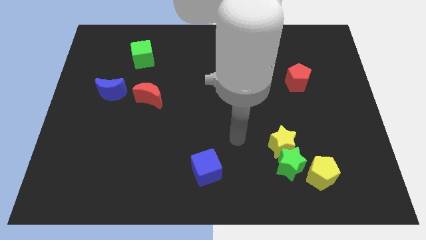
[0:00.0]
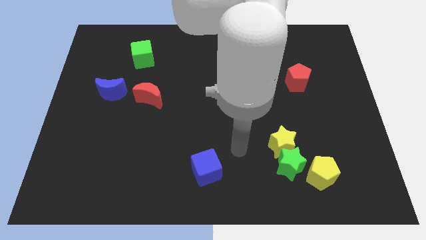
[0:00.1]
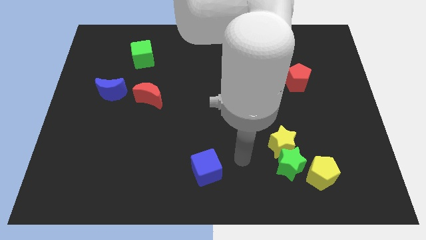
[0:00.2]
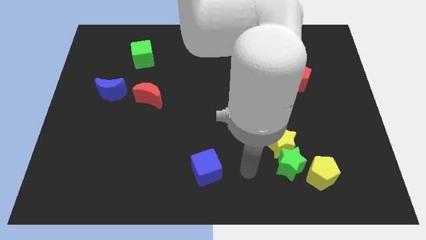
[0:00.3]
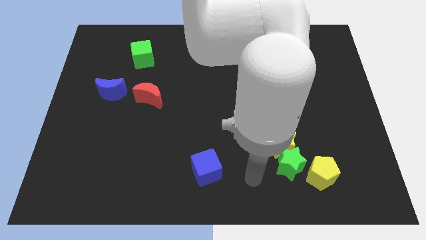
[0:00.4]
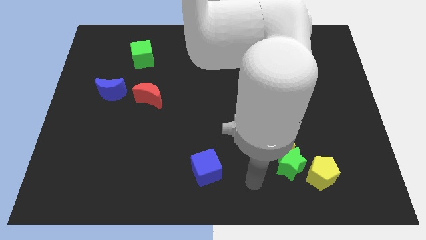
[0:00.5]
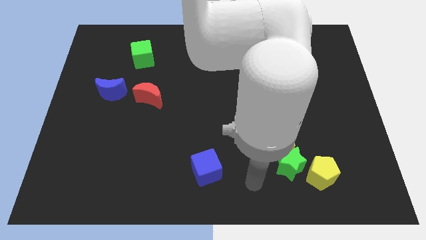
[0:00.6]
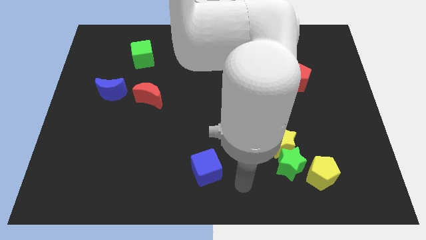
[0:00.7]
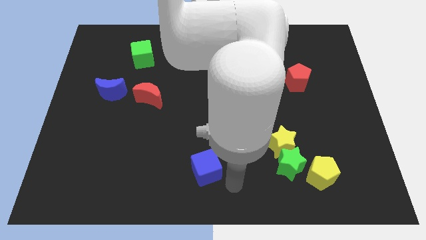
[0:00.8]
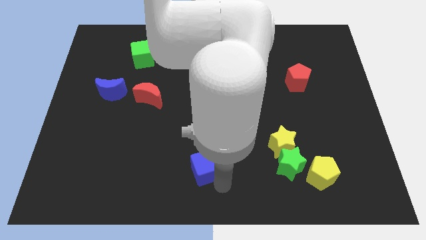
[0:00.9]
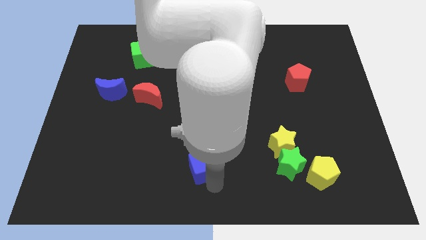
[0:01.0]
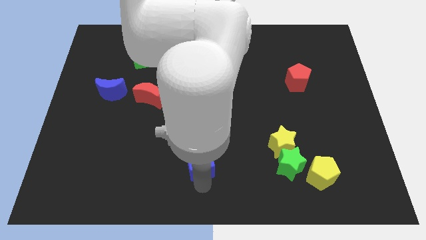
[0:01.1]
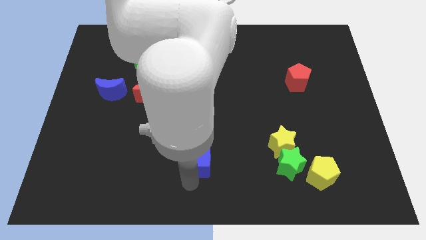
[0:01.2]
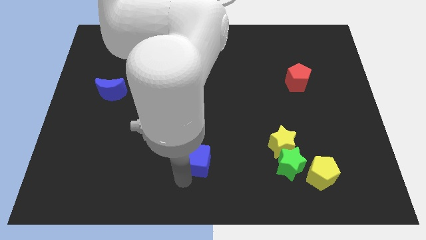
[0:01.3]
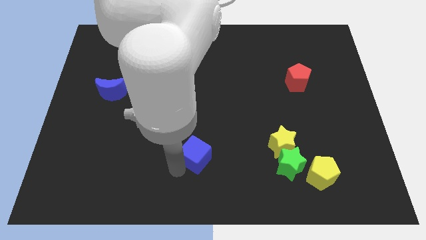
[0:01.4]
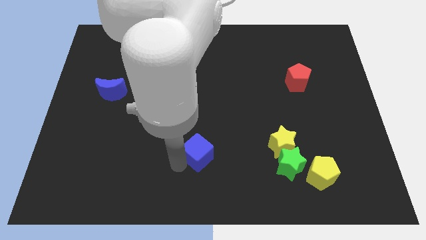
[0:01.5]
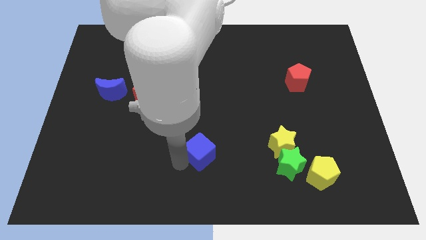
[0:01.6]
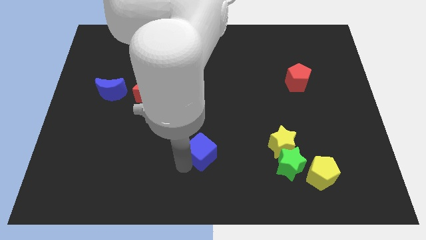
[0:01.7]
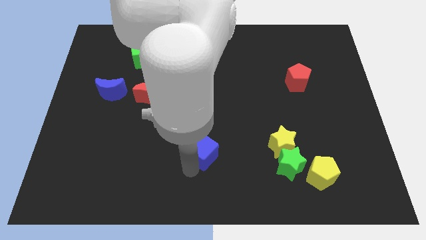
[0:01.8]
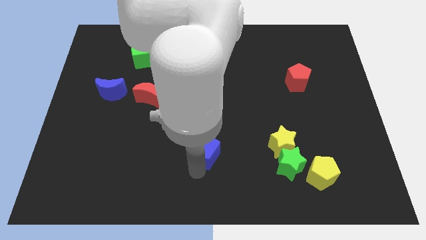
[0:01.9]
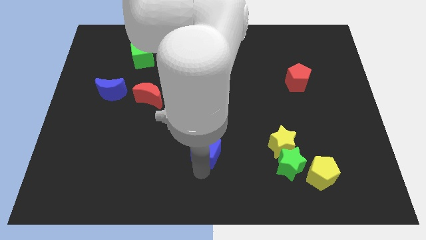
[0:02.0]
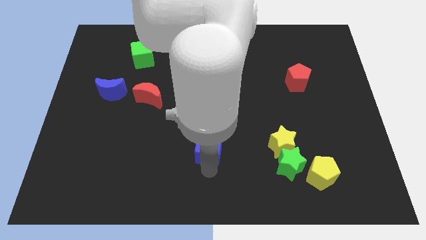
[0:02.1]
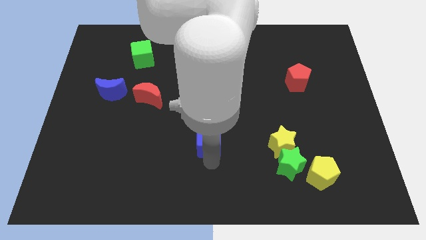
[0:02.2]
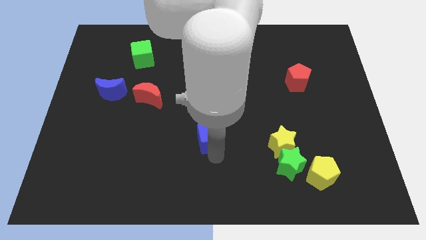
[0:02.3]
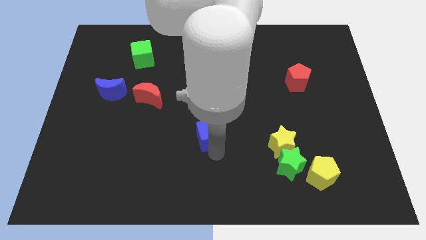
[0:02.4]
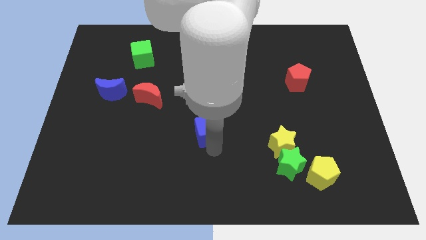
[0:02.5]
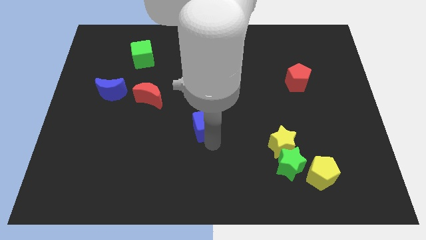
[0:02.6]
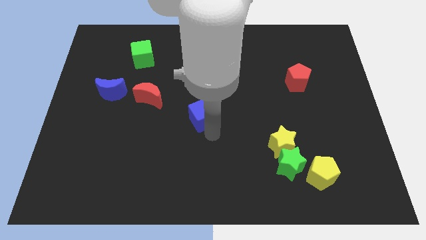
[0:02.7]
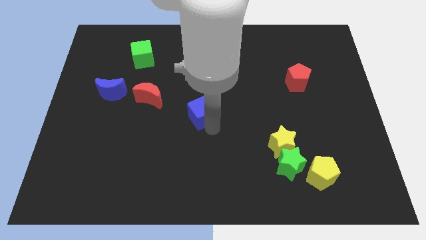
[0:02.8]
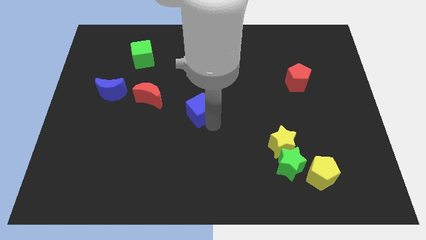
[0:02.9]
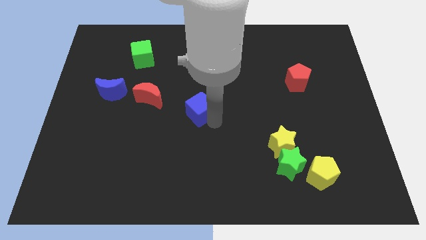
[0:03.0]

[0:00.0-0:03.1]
push blue cube towards center

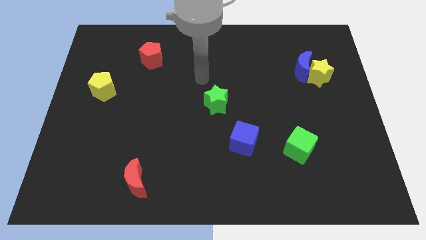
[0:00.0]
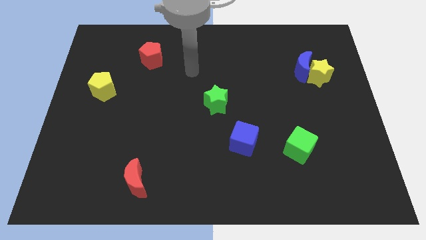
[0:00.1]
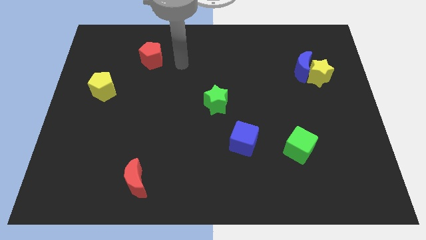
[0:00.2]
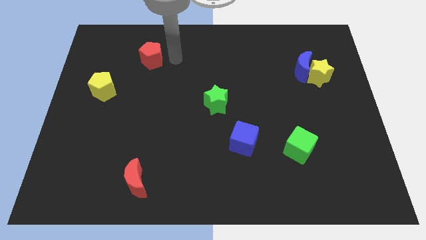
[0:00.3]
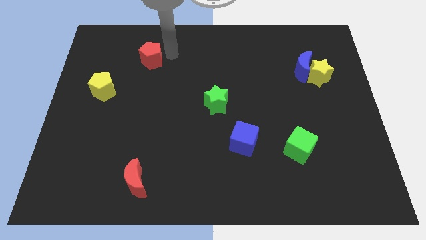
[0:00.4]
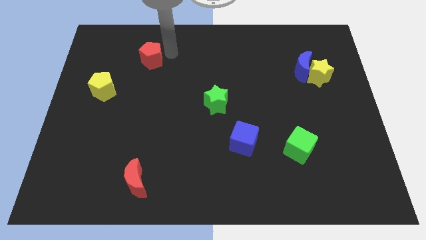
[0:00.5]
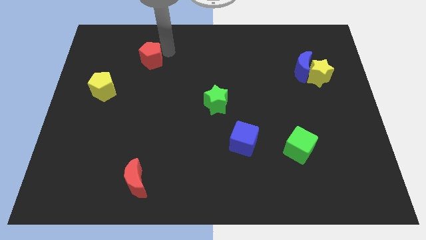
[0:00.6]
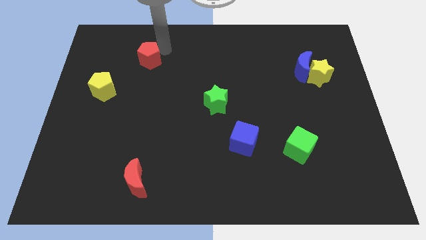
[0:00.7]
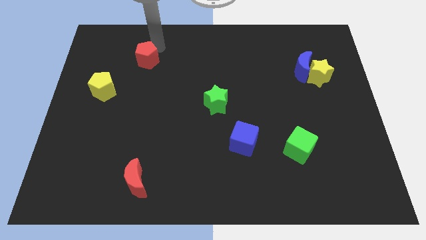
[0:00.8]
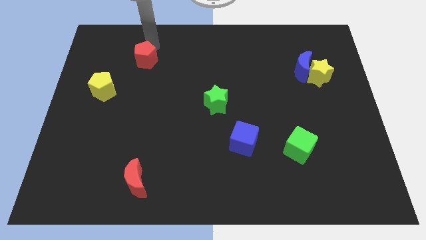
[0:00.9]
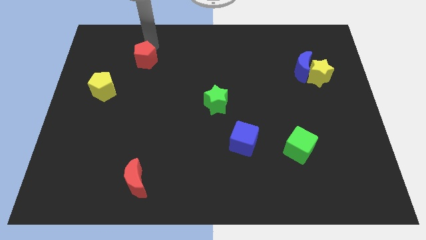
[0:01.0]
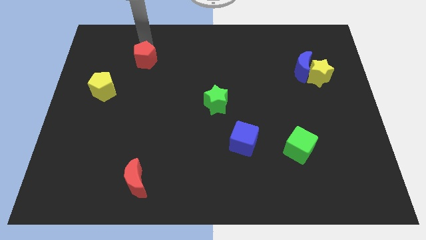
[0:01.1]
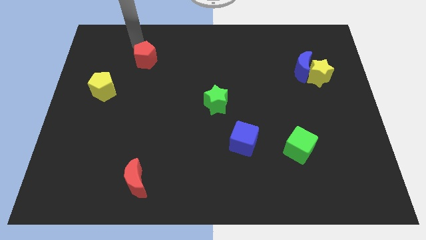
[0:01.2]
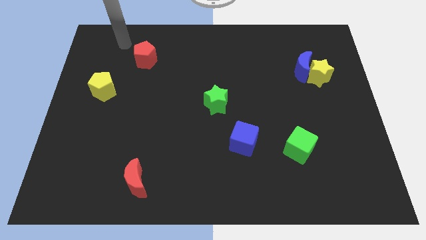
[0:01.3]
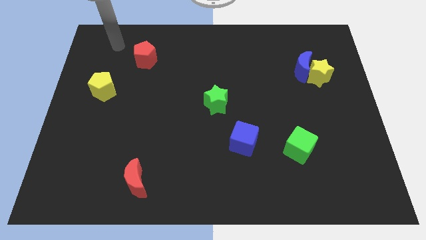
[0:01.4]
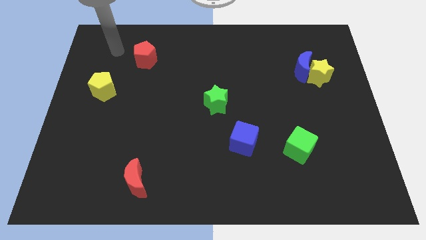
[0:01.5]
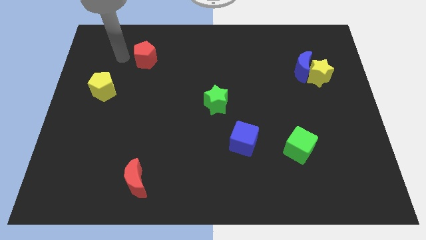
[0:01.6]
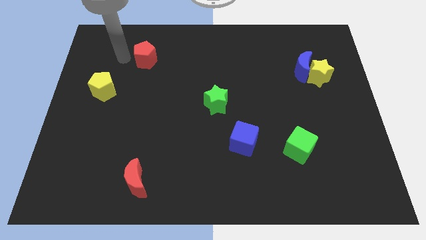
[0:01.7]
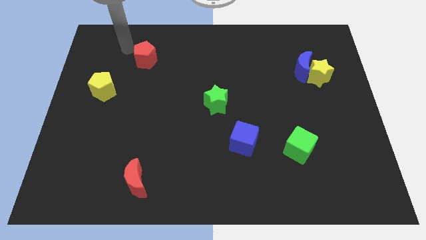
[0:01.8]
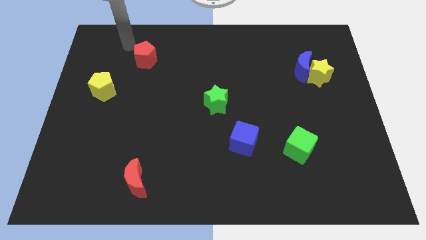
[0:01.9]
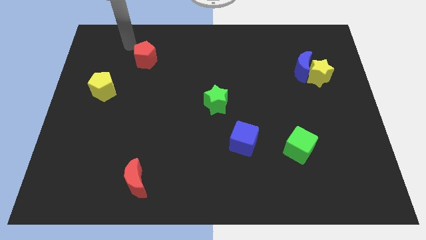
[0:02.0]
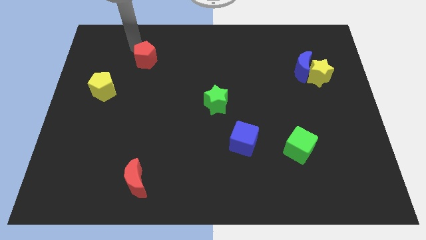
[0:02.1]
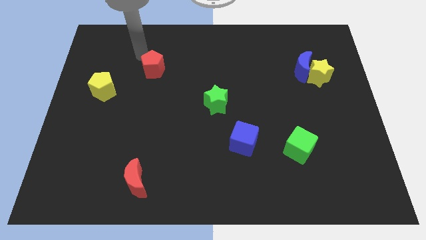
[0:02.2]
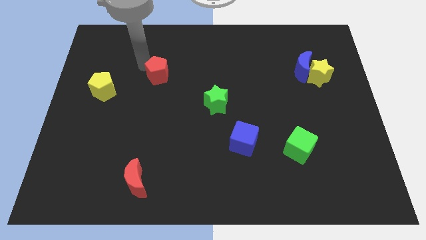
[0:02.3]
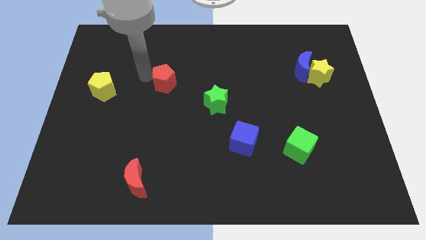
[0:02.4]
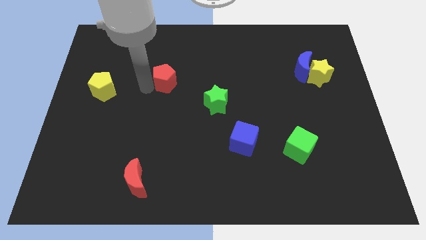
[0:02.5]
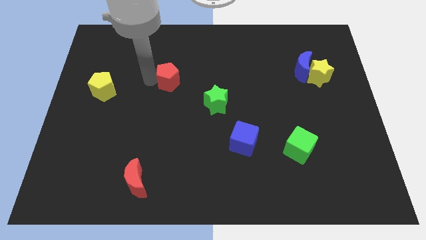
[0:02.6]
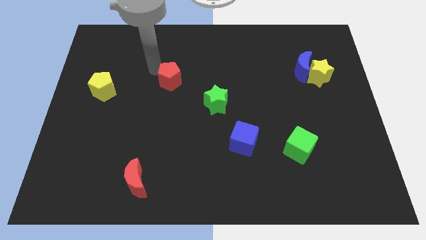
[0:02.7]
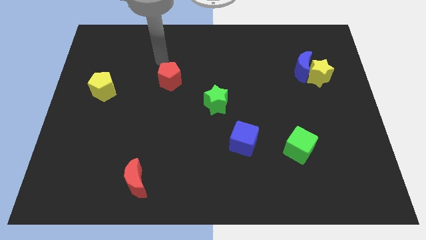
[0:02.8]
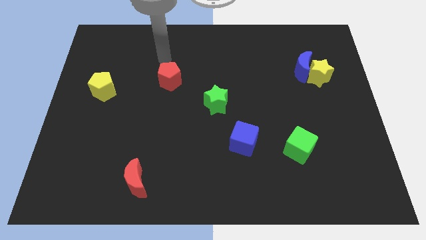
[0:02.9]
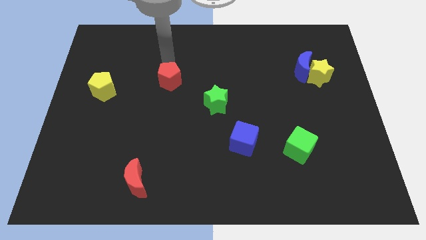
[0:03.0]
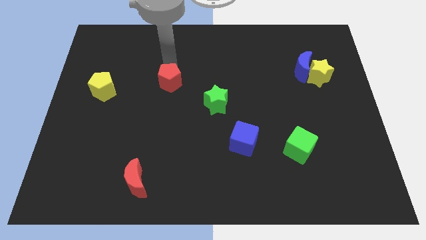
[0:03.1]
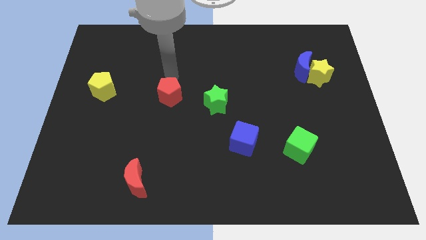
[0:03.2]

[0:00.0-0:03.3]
move the red pentagon horizontally to the right side of the yellow pentagon

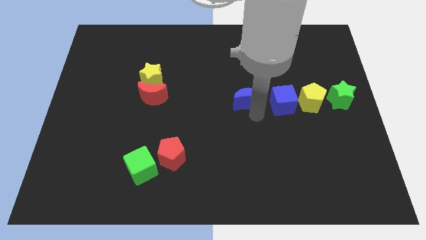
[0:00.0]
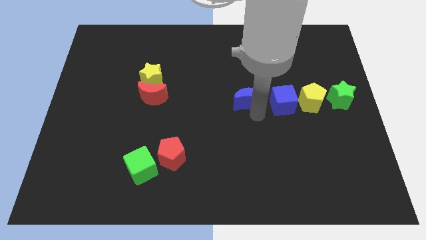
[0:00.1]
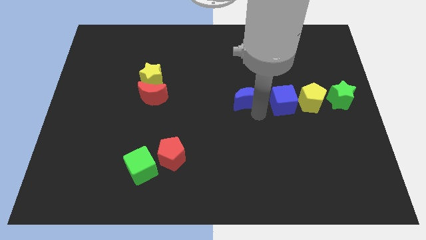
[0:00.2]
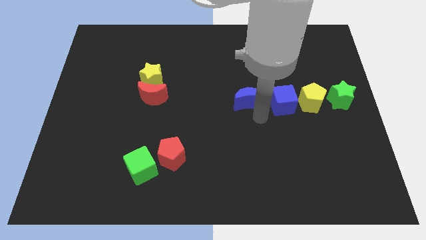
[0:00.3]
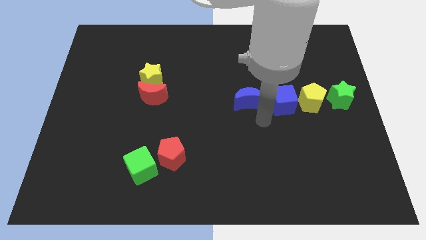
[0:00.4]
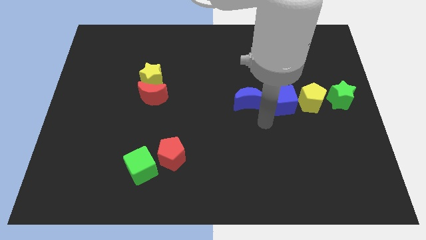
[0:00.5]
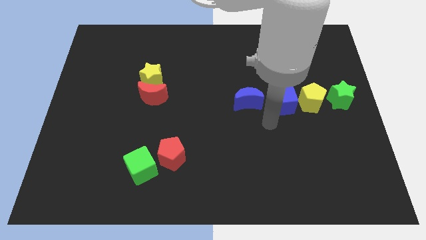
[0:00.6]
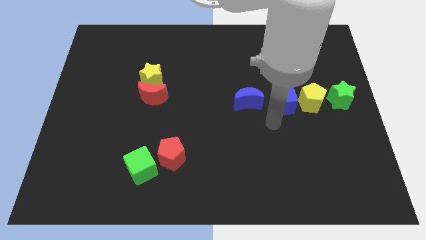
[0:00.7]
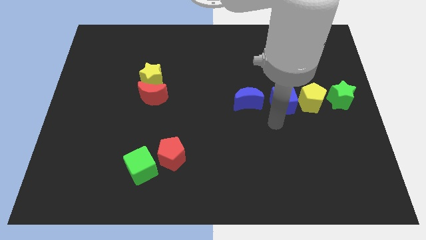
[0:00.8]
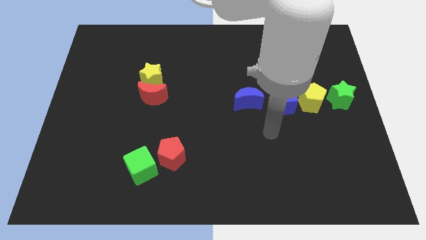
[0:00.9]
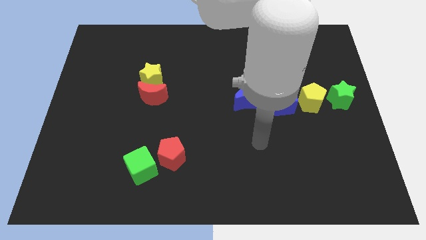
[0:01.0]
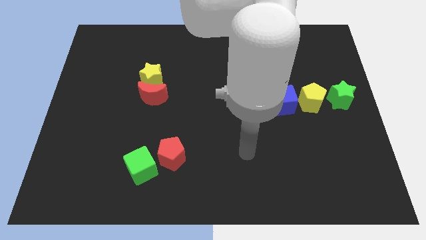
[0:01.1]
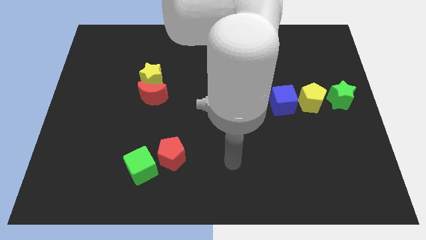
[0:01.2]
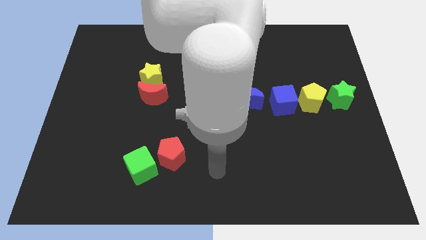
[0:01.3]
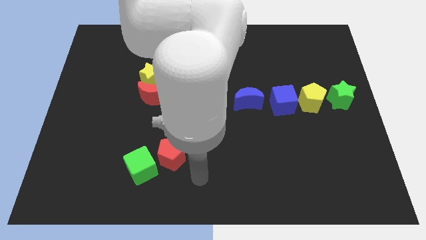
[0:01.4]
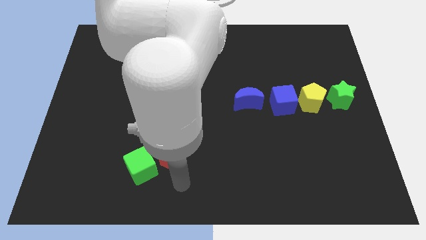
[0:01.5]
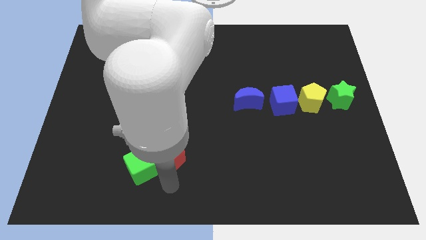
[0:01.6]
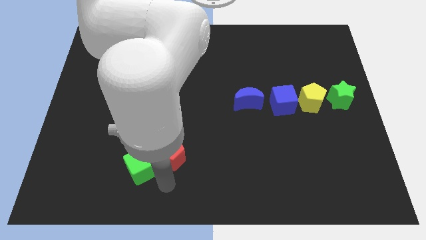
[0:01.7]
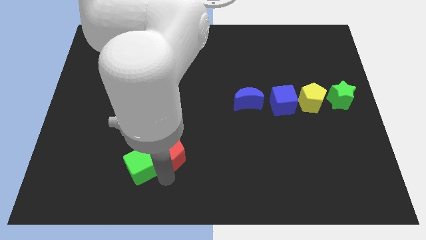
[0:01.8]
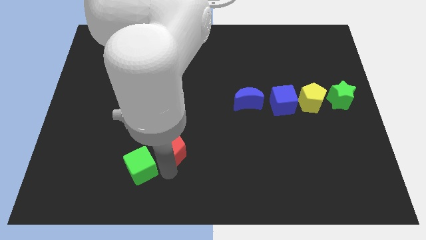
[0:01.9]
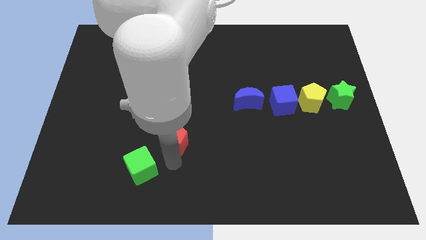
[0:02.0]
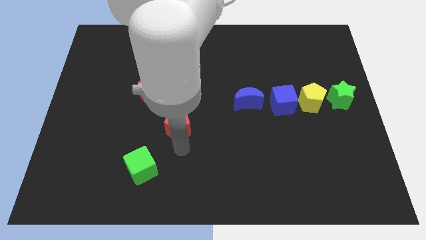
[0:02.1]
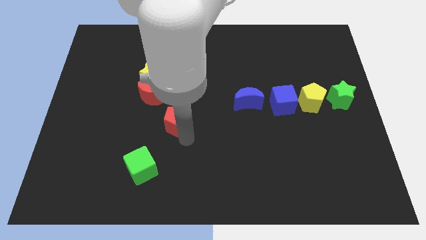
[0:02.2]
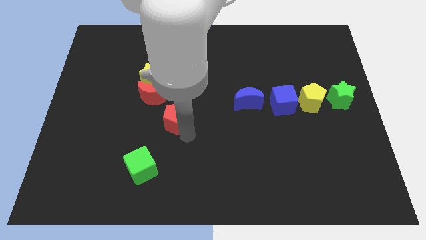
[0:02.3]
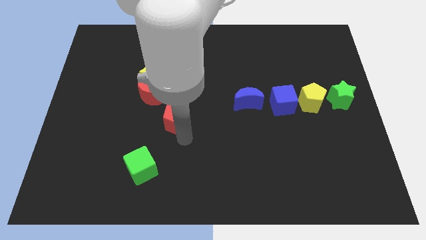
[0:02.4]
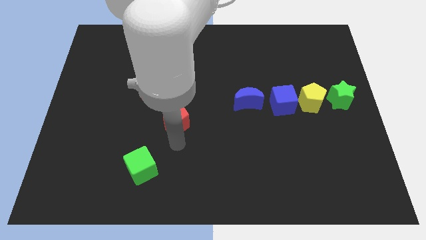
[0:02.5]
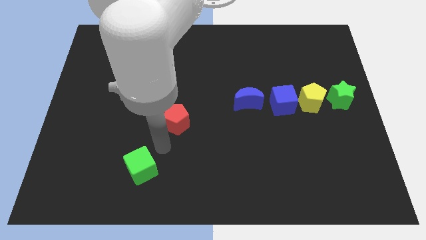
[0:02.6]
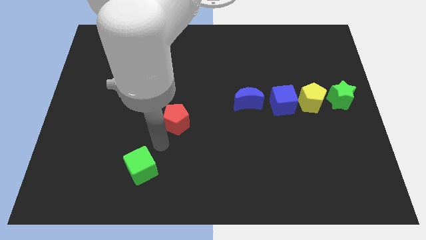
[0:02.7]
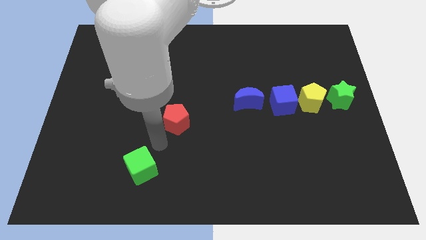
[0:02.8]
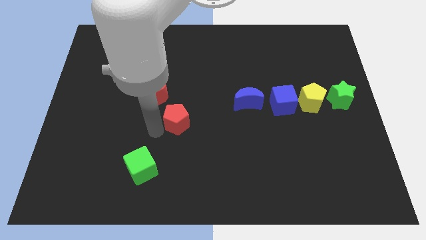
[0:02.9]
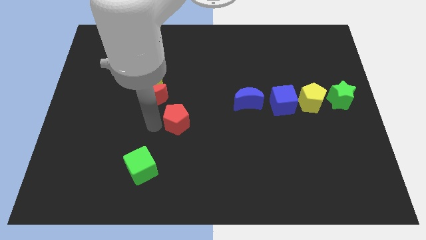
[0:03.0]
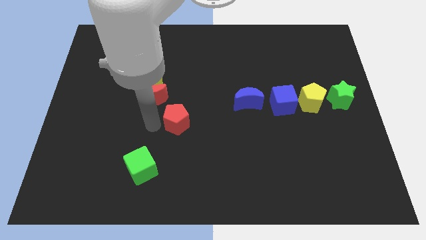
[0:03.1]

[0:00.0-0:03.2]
slightly move the red pentagon up
